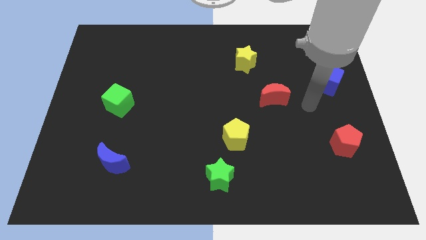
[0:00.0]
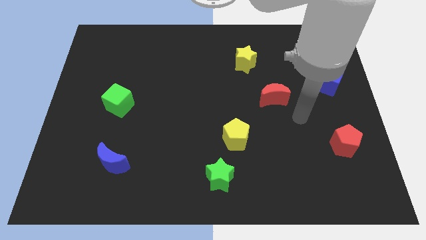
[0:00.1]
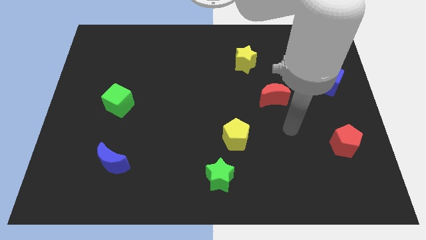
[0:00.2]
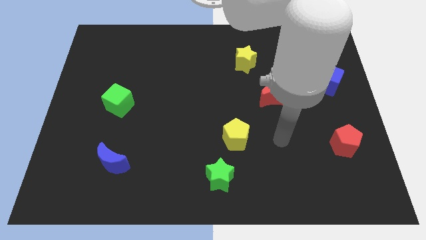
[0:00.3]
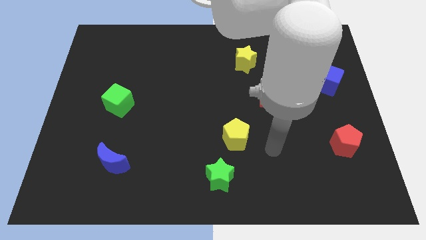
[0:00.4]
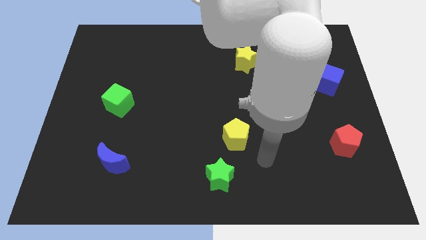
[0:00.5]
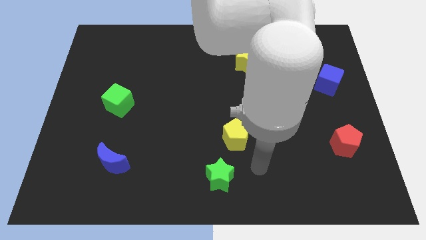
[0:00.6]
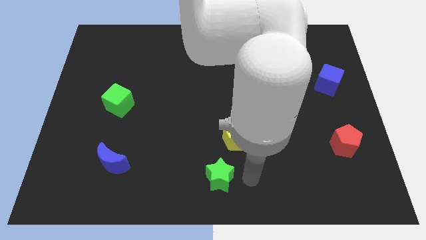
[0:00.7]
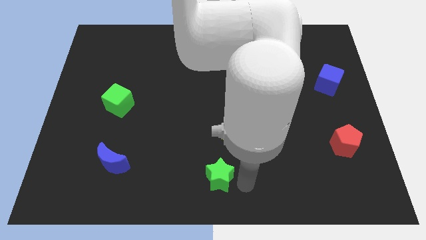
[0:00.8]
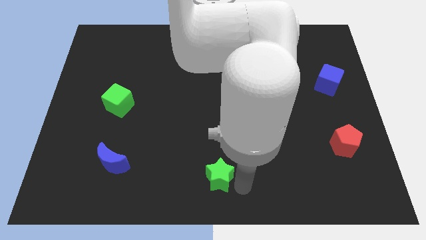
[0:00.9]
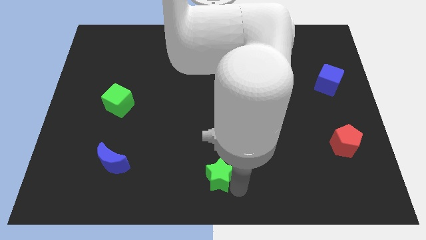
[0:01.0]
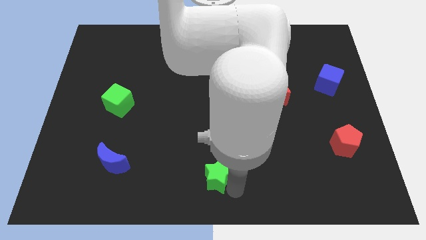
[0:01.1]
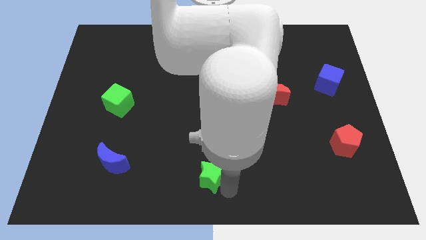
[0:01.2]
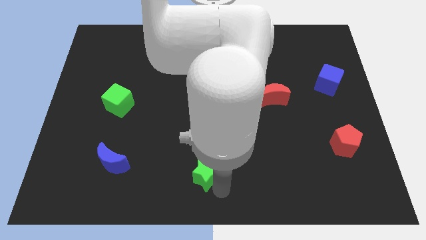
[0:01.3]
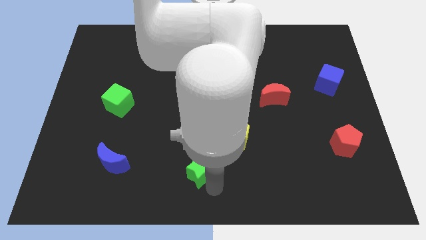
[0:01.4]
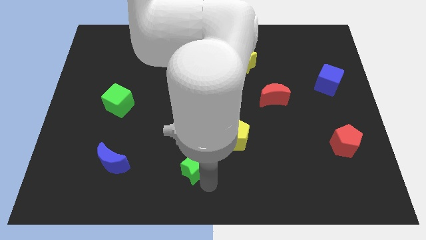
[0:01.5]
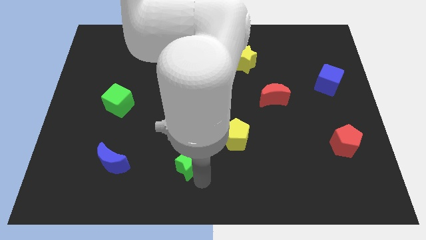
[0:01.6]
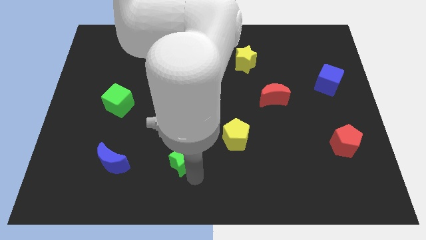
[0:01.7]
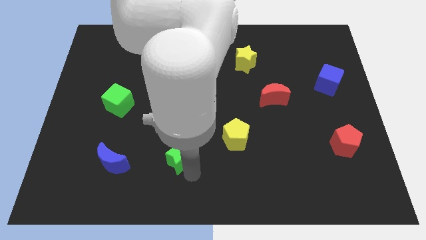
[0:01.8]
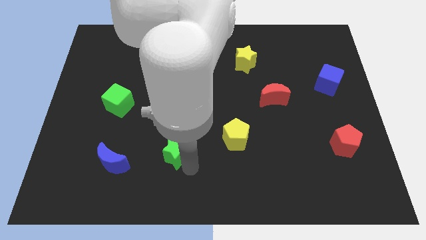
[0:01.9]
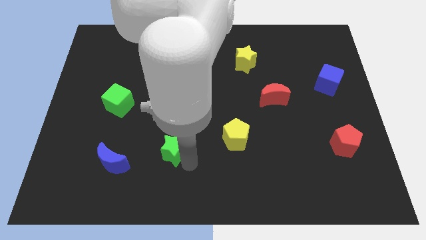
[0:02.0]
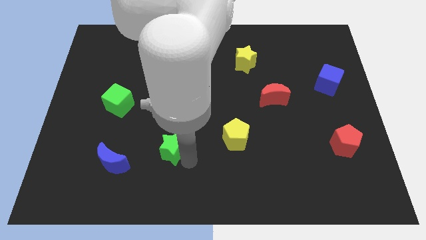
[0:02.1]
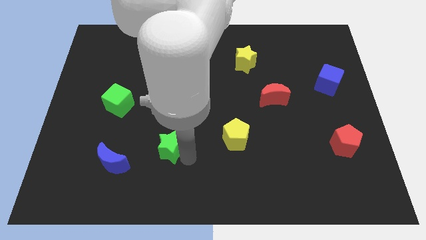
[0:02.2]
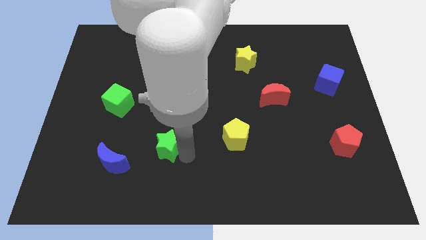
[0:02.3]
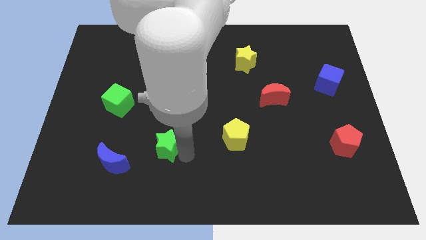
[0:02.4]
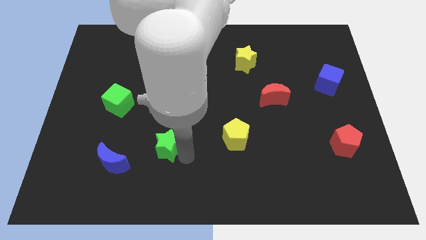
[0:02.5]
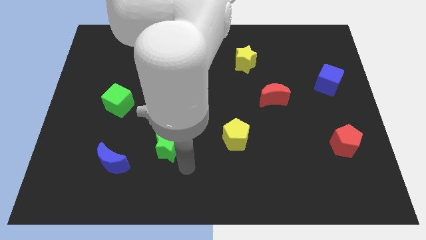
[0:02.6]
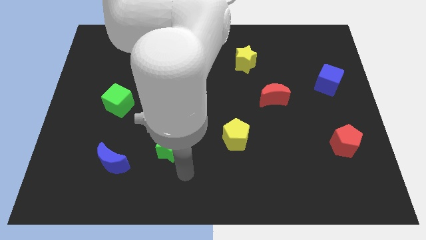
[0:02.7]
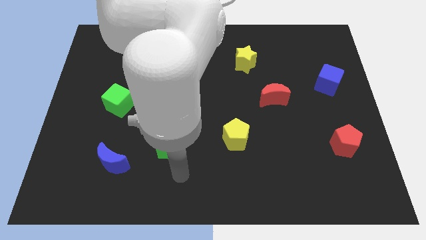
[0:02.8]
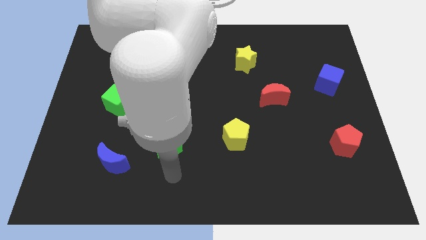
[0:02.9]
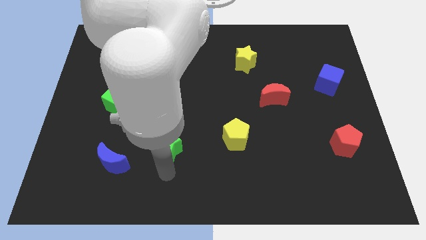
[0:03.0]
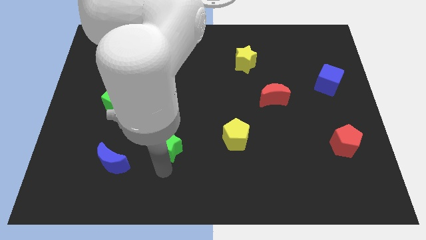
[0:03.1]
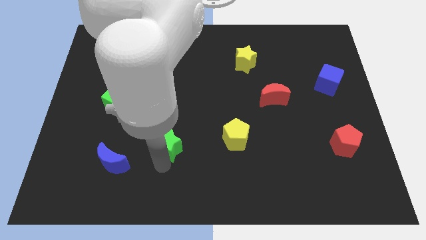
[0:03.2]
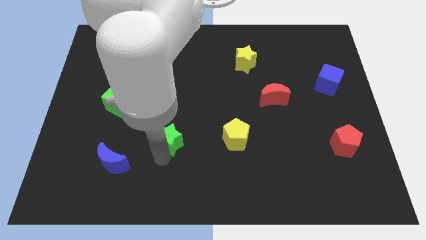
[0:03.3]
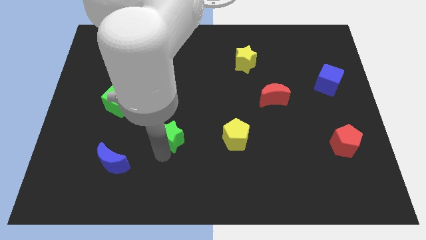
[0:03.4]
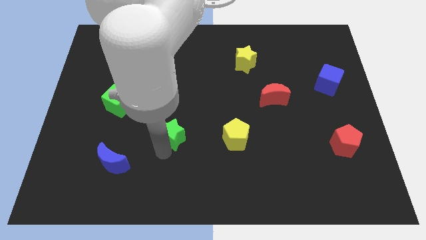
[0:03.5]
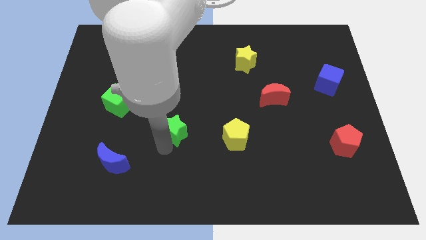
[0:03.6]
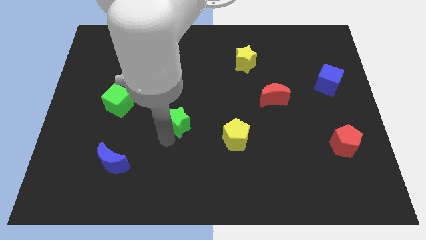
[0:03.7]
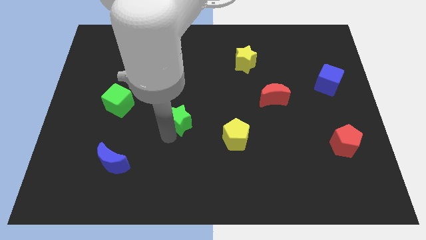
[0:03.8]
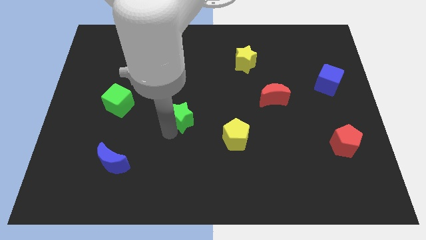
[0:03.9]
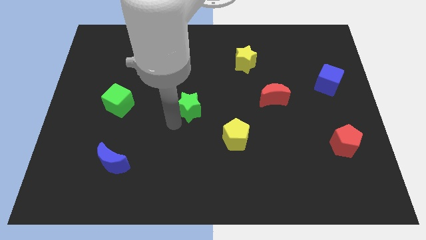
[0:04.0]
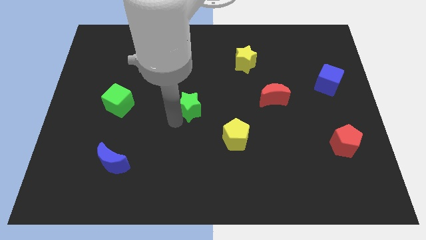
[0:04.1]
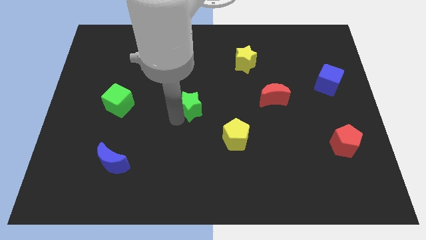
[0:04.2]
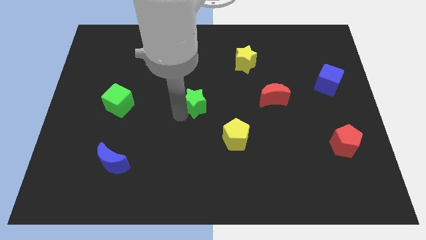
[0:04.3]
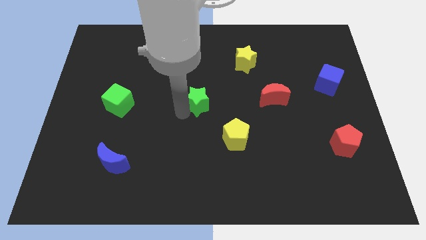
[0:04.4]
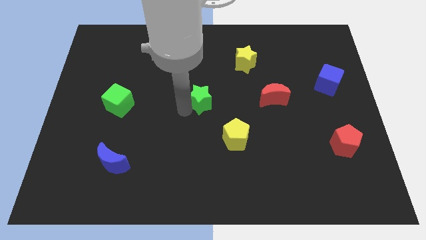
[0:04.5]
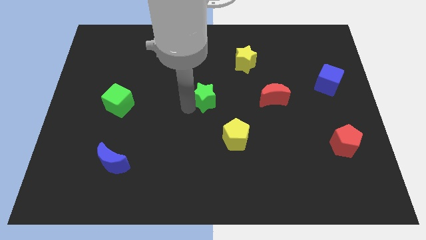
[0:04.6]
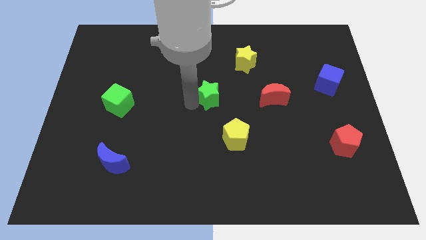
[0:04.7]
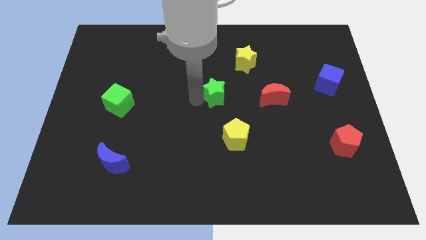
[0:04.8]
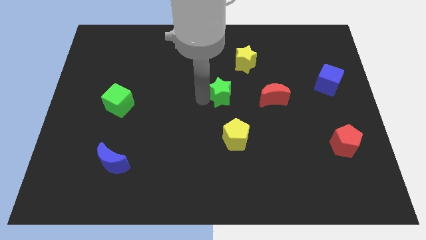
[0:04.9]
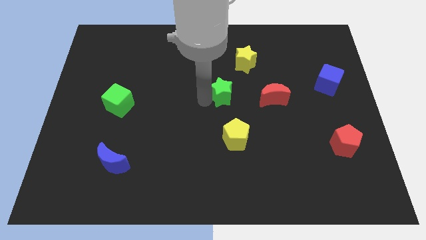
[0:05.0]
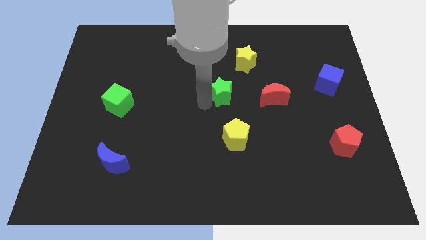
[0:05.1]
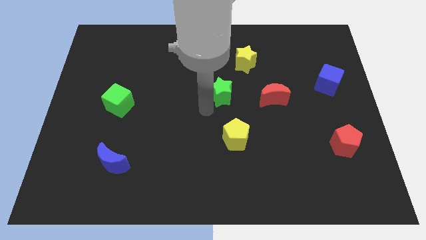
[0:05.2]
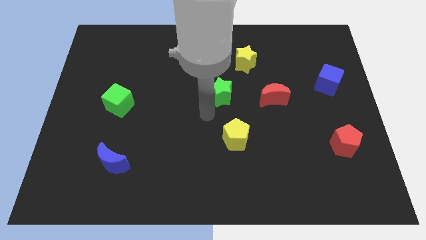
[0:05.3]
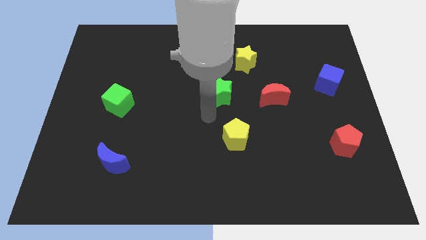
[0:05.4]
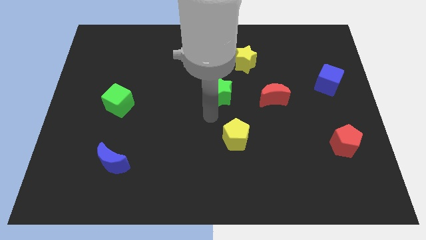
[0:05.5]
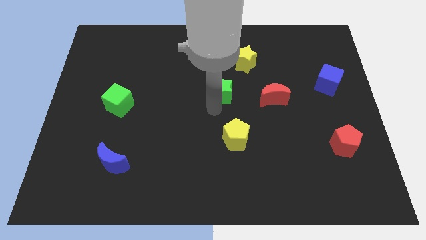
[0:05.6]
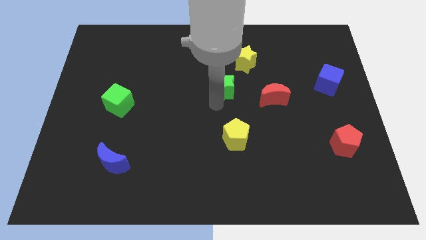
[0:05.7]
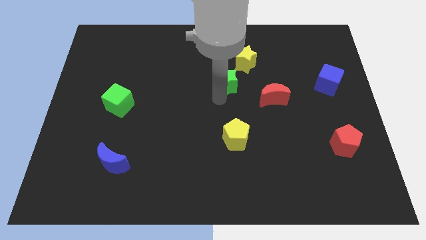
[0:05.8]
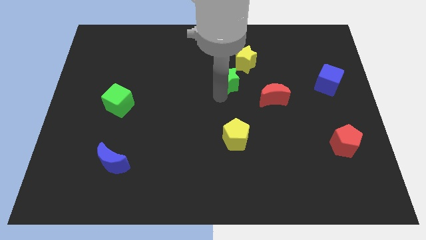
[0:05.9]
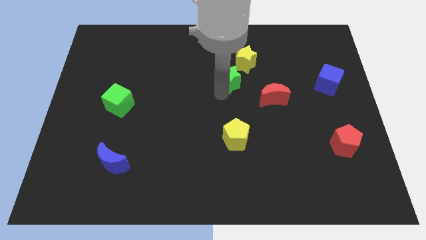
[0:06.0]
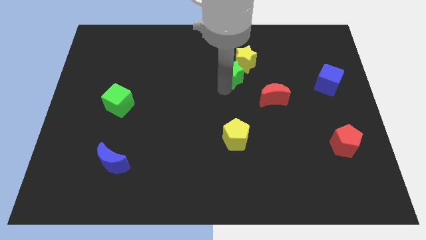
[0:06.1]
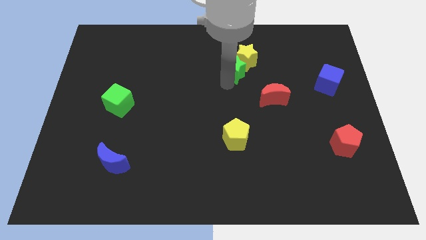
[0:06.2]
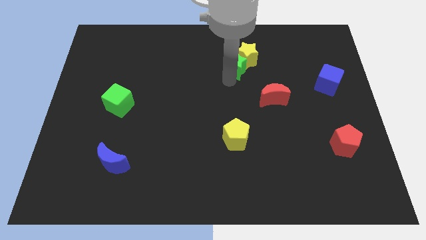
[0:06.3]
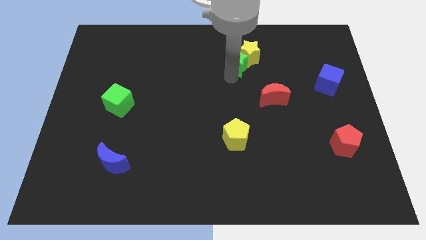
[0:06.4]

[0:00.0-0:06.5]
move the green star next to the yellow star
